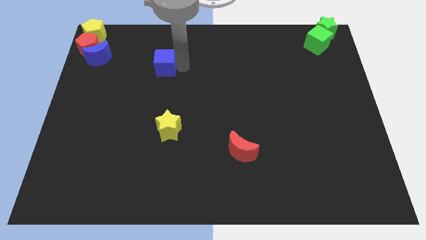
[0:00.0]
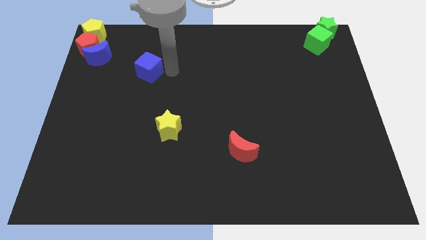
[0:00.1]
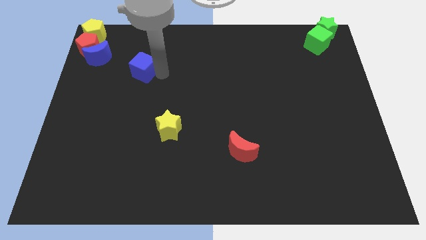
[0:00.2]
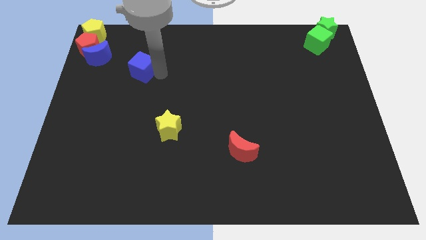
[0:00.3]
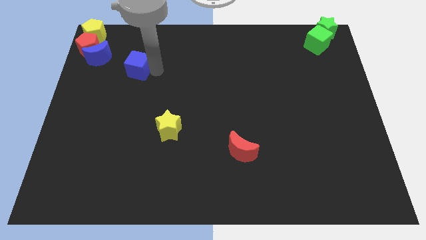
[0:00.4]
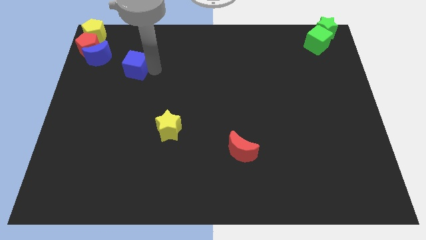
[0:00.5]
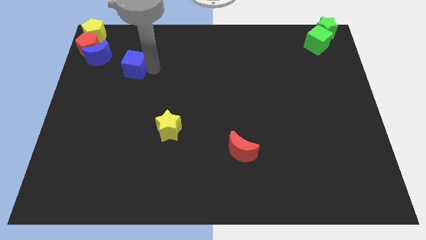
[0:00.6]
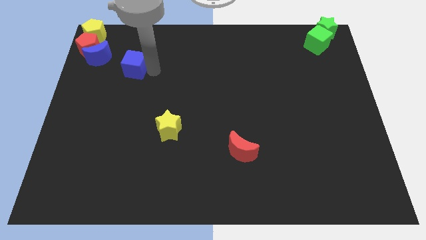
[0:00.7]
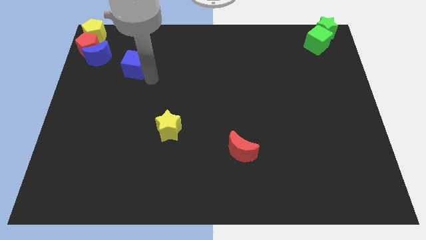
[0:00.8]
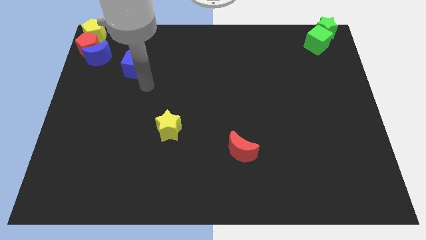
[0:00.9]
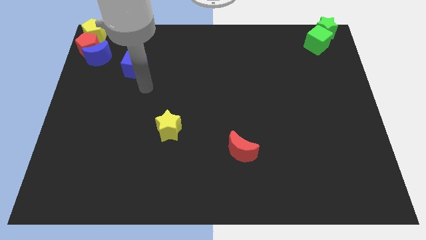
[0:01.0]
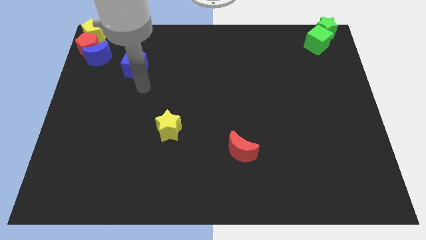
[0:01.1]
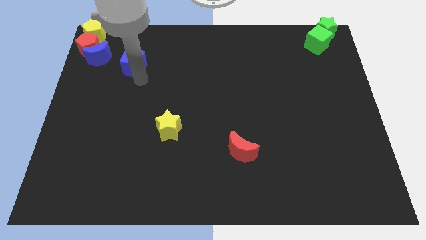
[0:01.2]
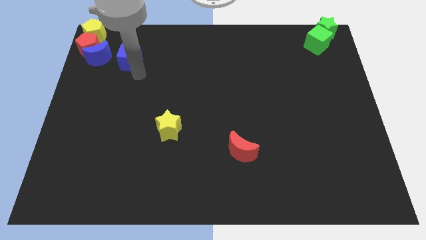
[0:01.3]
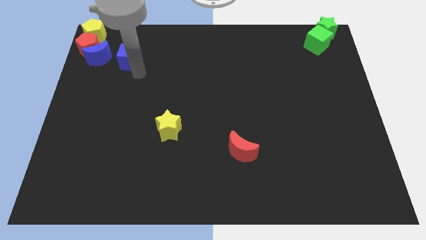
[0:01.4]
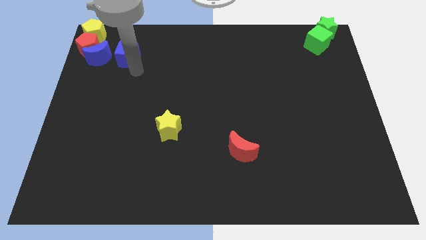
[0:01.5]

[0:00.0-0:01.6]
move the blue cube to the right of the blue crescent

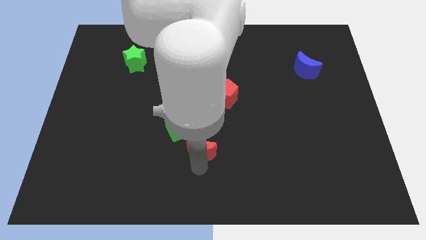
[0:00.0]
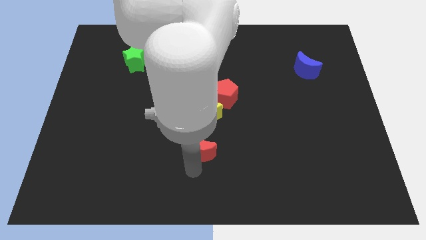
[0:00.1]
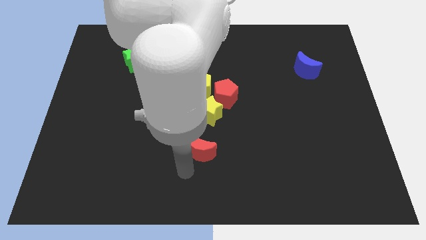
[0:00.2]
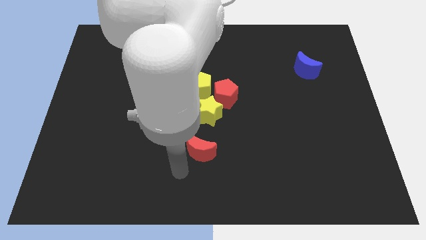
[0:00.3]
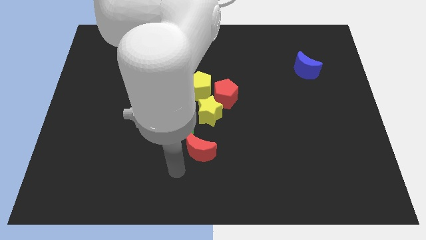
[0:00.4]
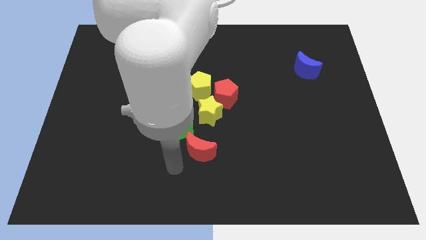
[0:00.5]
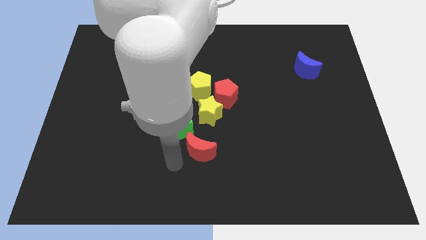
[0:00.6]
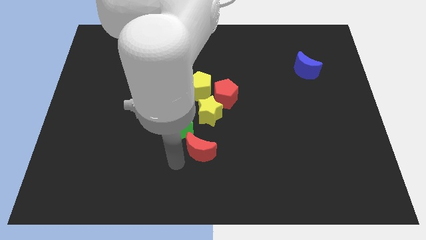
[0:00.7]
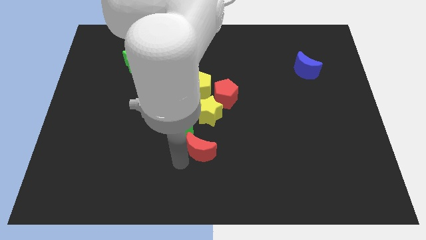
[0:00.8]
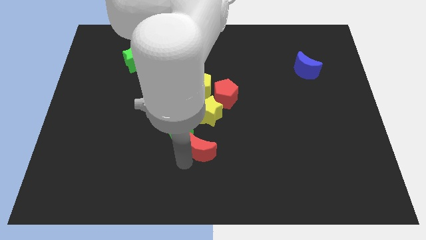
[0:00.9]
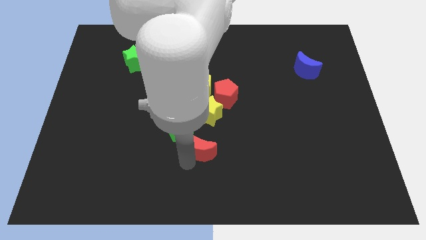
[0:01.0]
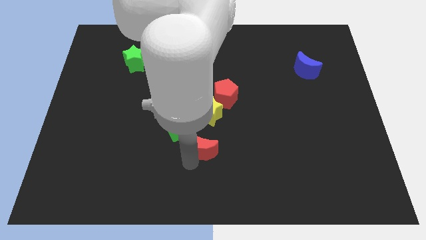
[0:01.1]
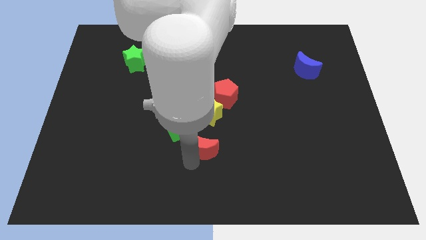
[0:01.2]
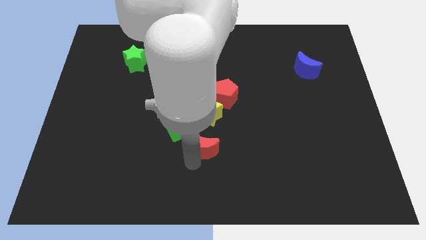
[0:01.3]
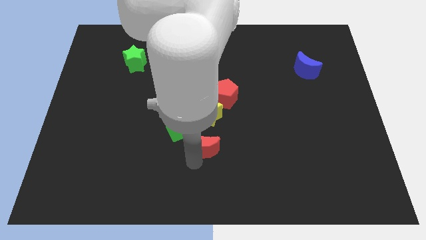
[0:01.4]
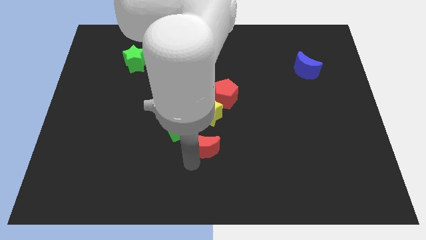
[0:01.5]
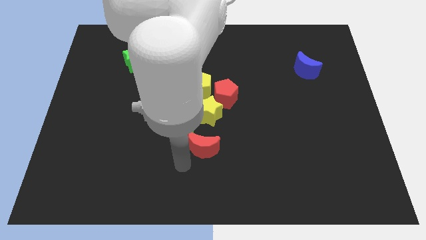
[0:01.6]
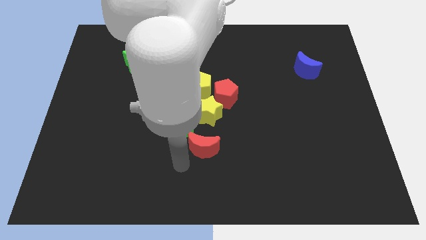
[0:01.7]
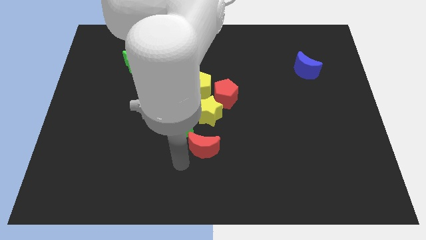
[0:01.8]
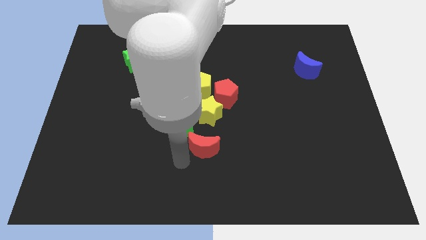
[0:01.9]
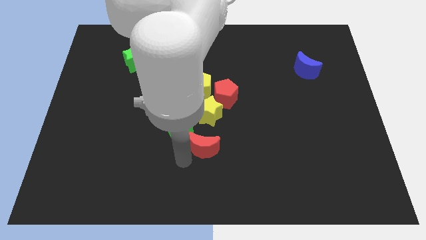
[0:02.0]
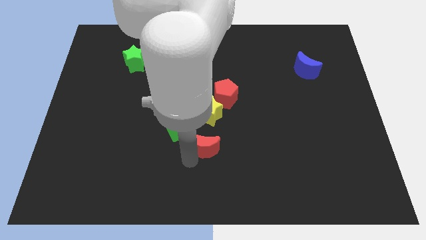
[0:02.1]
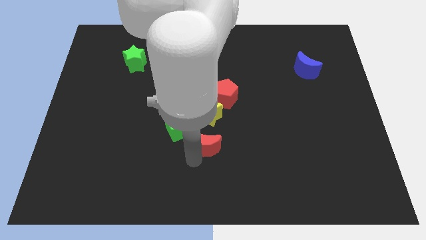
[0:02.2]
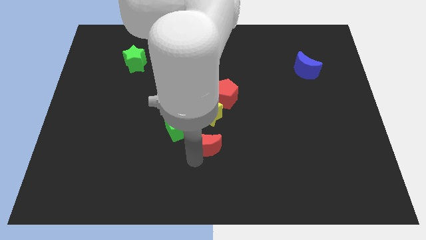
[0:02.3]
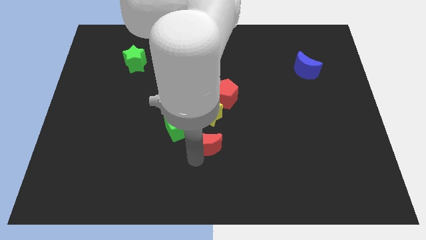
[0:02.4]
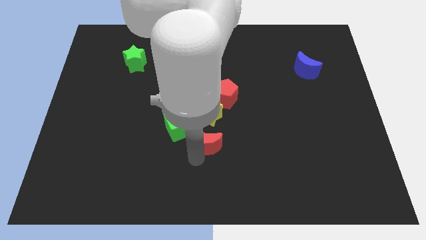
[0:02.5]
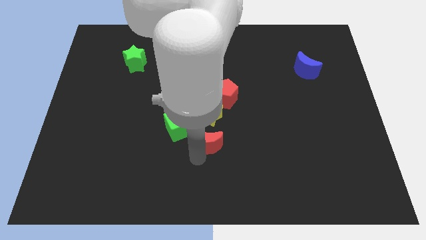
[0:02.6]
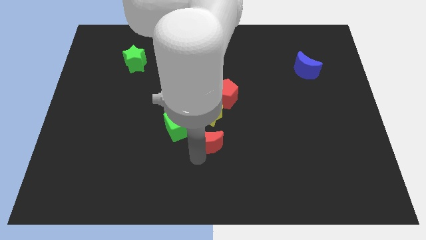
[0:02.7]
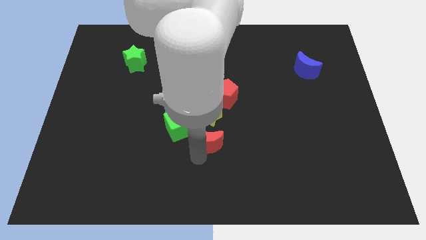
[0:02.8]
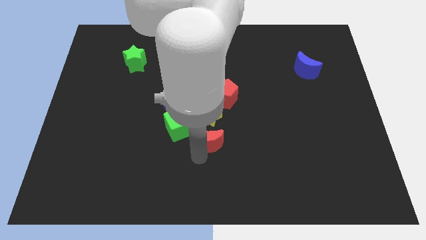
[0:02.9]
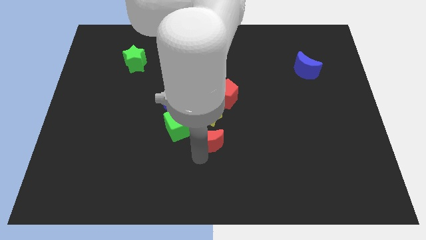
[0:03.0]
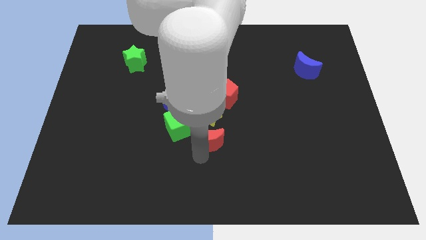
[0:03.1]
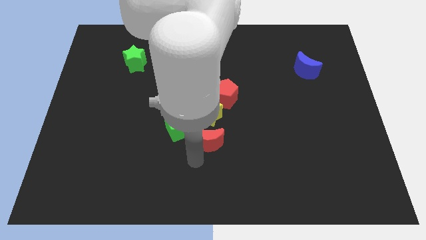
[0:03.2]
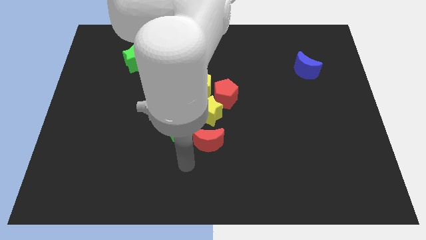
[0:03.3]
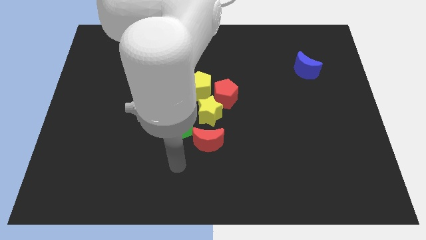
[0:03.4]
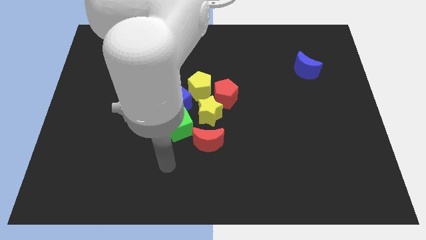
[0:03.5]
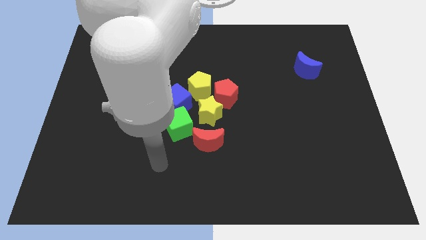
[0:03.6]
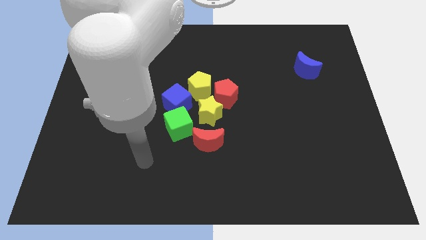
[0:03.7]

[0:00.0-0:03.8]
move the red crescent to the right side of the green cube

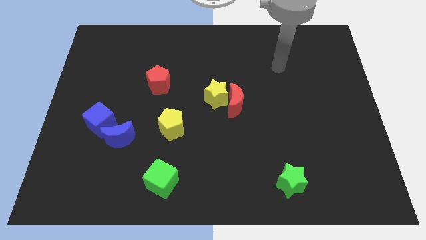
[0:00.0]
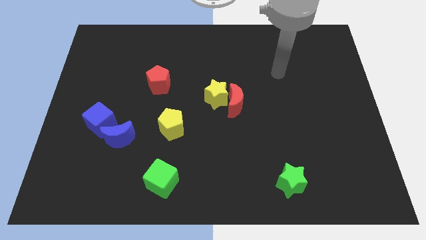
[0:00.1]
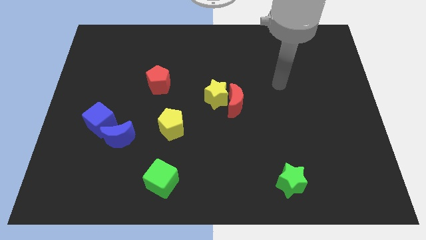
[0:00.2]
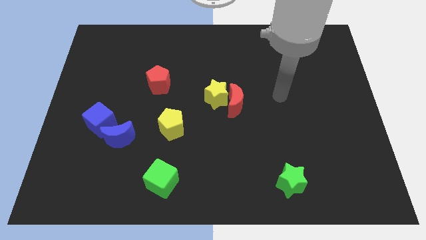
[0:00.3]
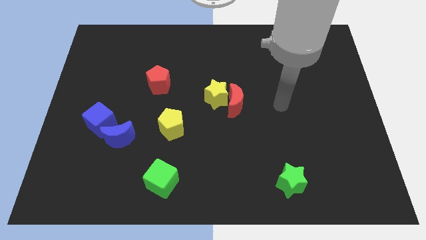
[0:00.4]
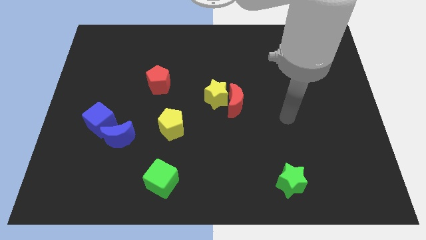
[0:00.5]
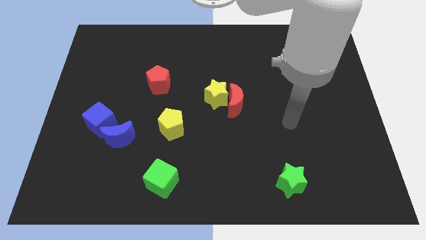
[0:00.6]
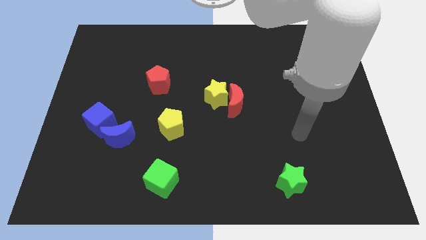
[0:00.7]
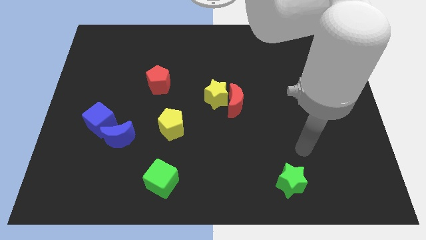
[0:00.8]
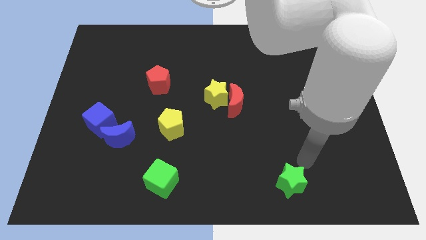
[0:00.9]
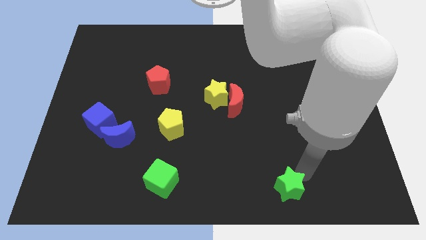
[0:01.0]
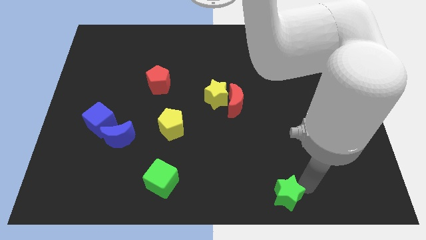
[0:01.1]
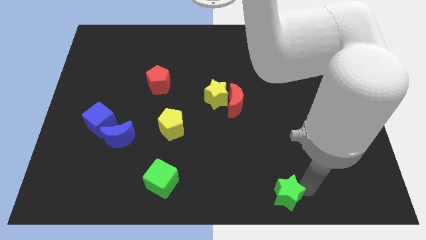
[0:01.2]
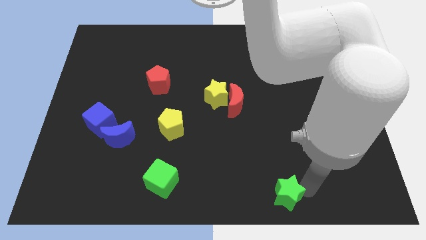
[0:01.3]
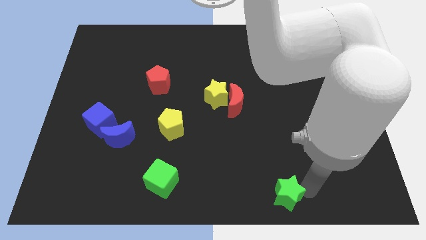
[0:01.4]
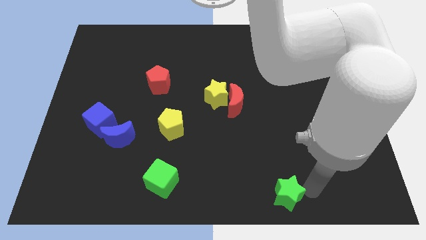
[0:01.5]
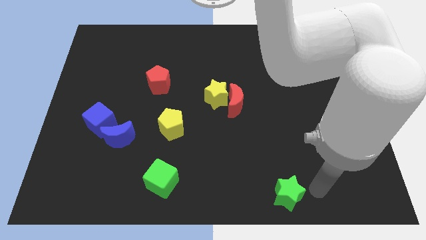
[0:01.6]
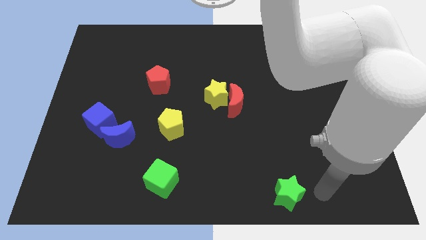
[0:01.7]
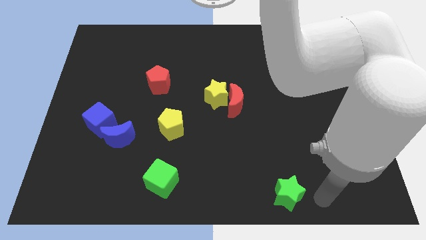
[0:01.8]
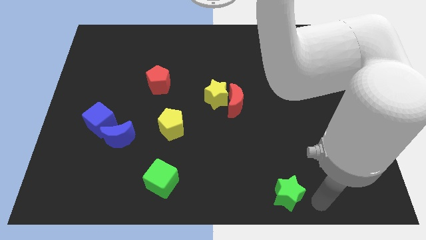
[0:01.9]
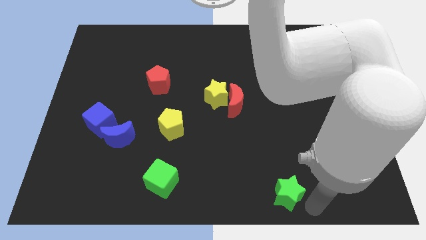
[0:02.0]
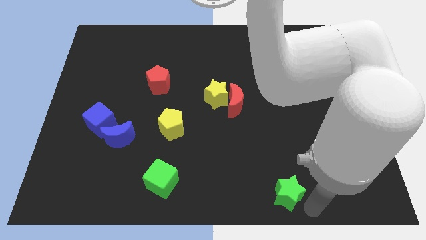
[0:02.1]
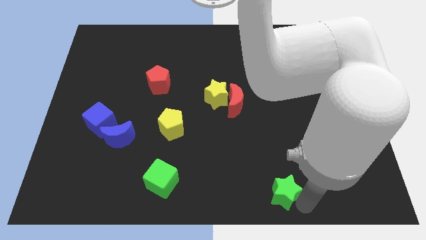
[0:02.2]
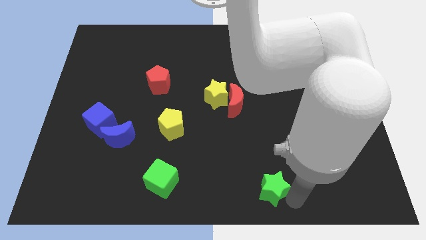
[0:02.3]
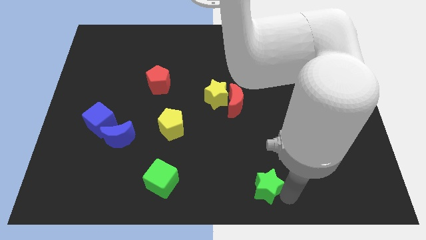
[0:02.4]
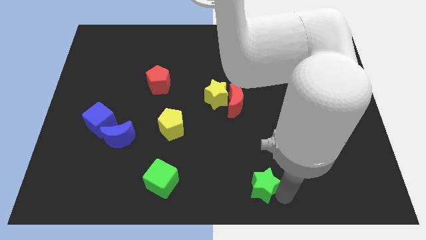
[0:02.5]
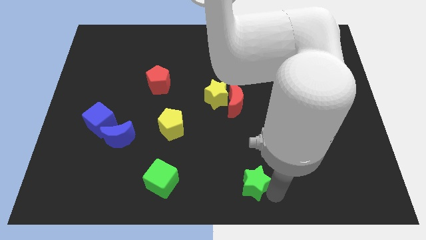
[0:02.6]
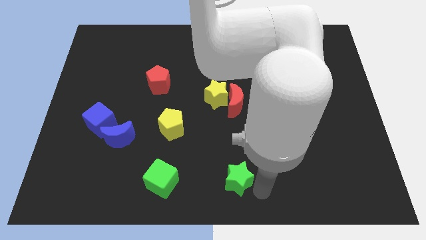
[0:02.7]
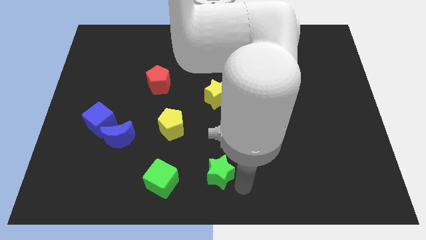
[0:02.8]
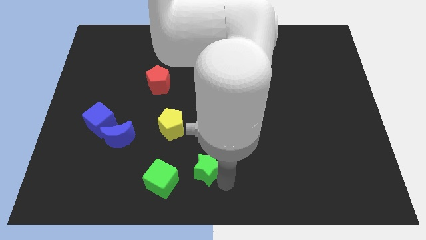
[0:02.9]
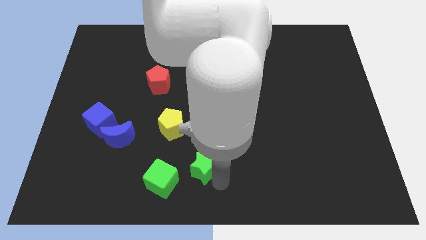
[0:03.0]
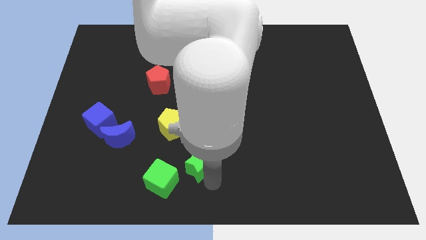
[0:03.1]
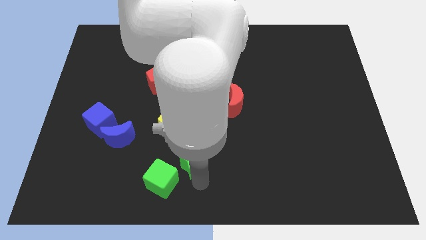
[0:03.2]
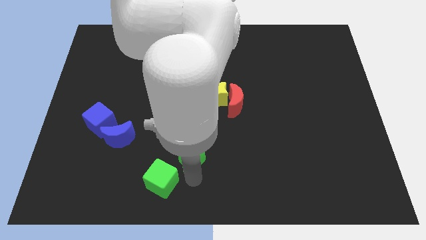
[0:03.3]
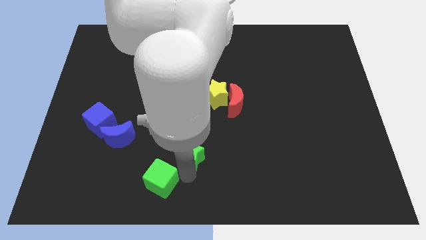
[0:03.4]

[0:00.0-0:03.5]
push the green star diagonally above the green cube
